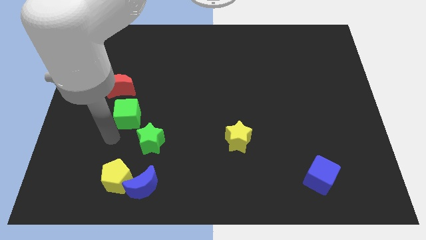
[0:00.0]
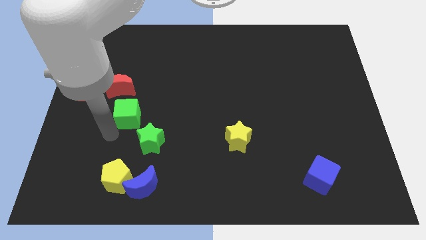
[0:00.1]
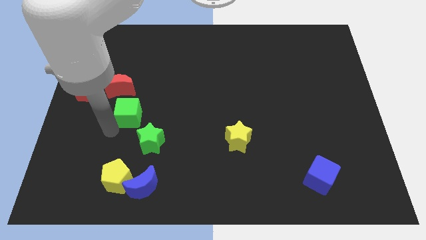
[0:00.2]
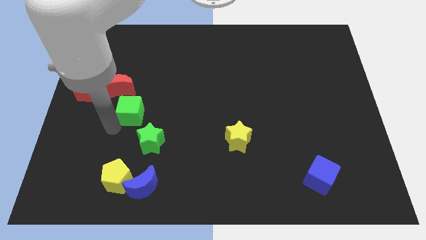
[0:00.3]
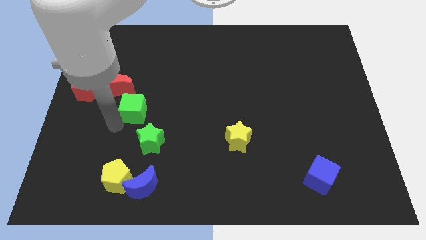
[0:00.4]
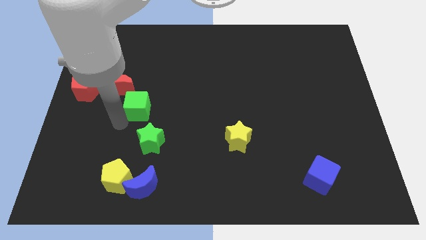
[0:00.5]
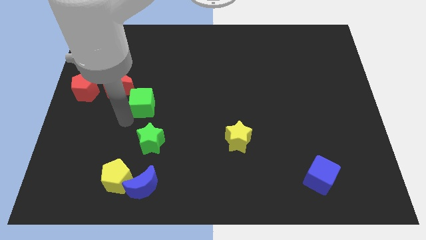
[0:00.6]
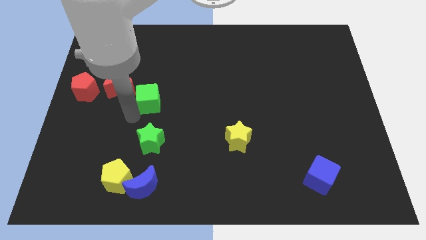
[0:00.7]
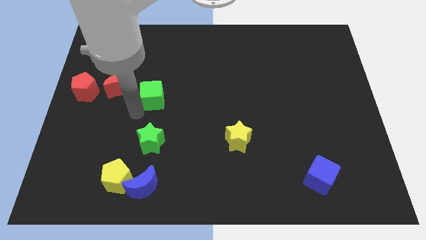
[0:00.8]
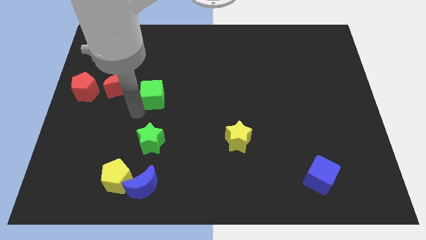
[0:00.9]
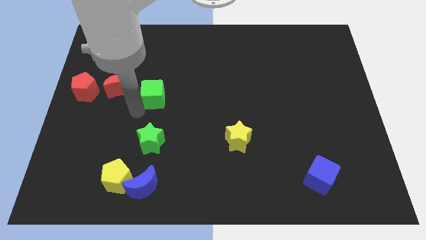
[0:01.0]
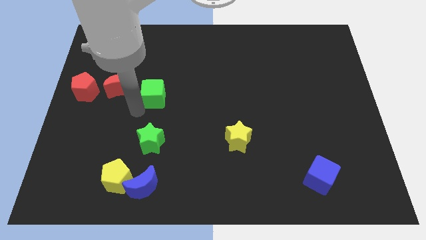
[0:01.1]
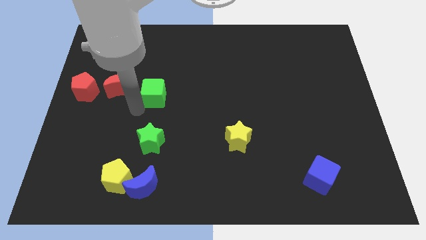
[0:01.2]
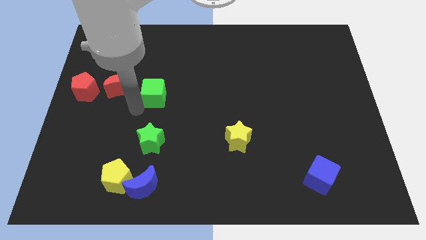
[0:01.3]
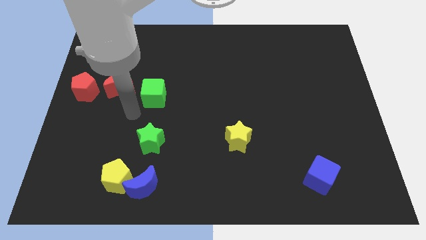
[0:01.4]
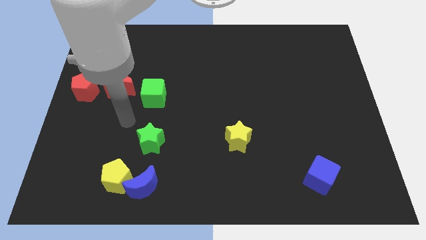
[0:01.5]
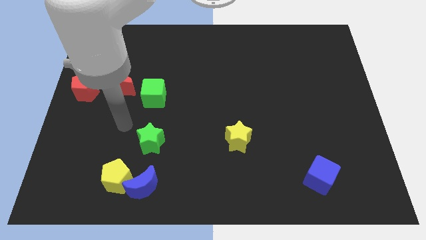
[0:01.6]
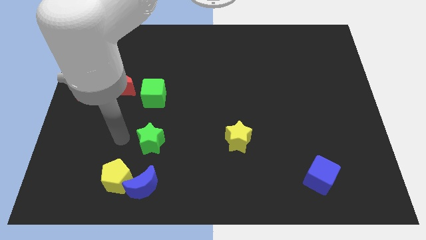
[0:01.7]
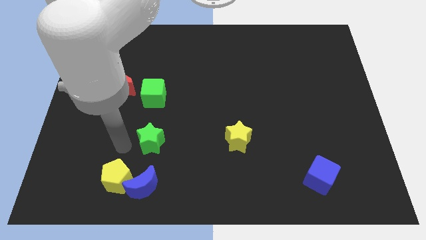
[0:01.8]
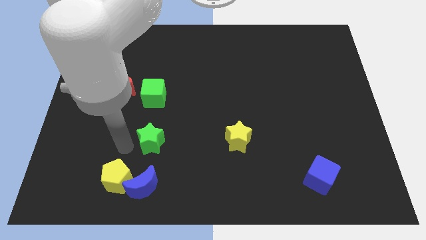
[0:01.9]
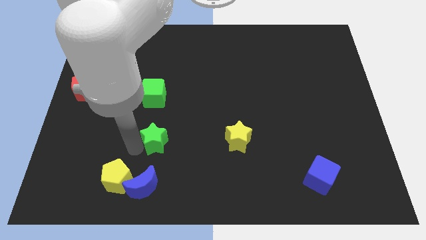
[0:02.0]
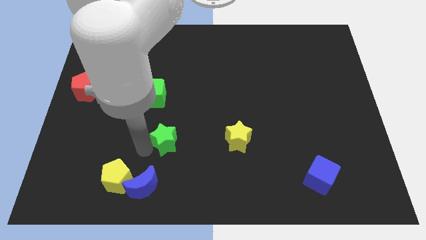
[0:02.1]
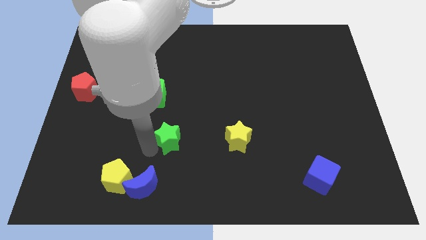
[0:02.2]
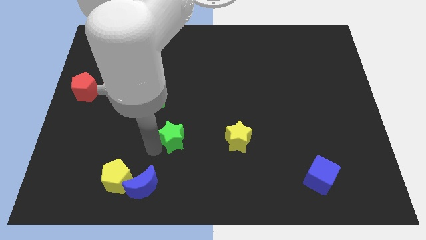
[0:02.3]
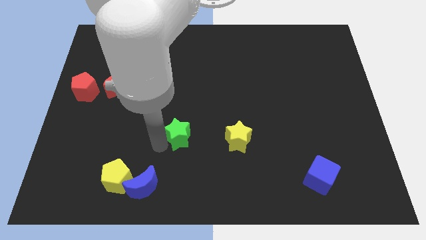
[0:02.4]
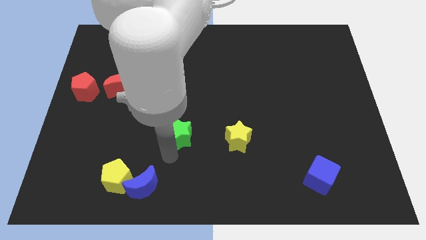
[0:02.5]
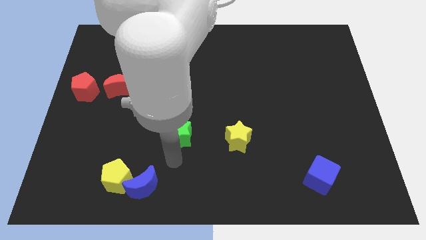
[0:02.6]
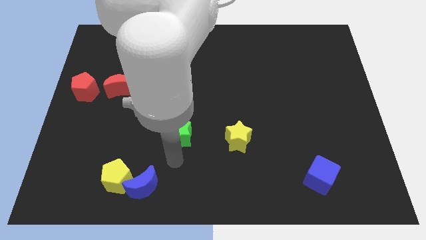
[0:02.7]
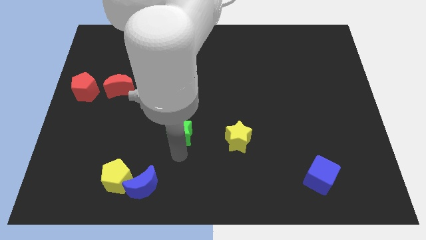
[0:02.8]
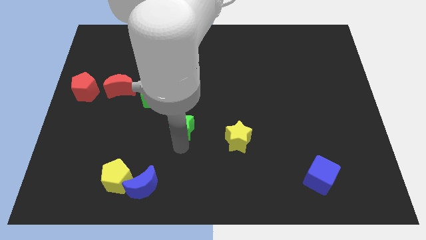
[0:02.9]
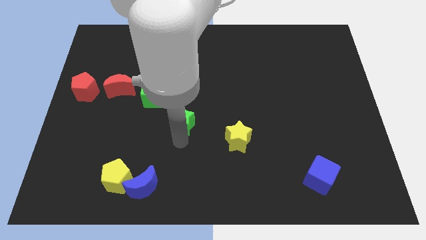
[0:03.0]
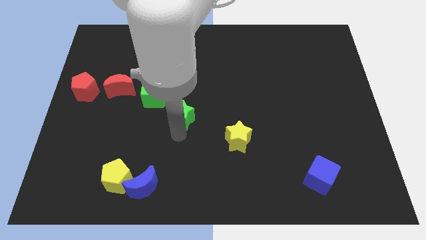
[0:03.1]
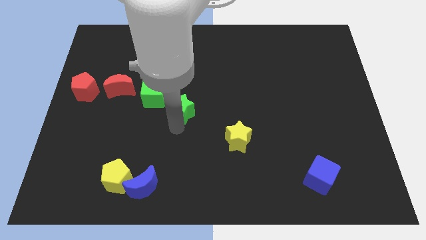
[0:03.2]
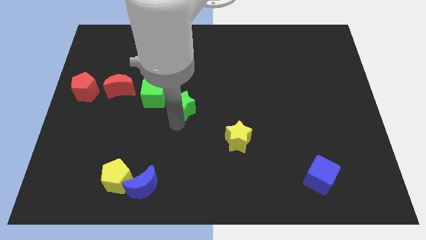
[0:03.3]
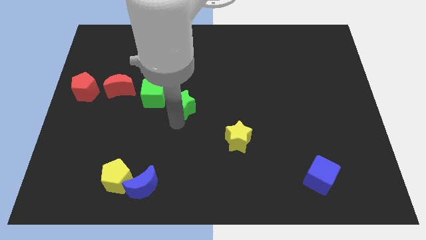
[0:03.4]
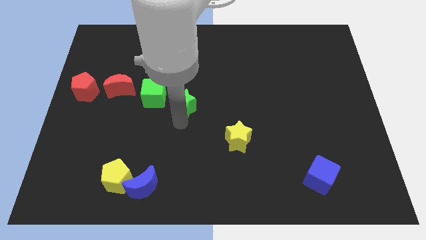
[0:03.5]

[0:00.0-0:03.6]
push both the green blocks diagonally on the top left side of the yellow star

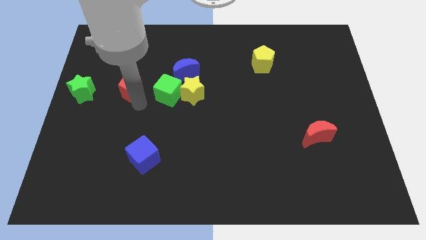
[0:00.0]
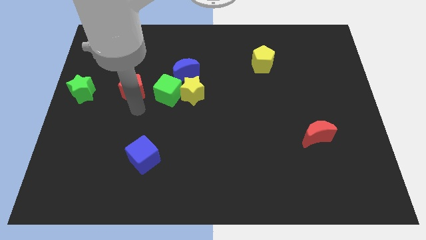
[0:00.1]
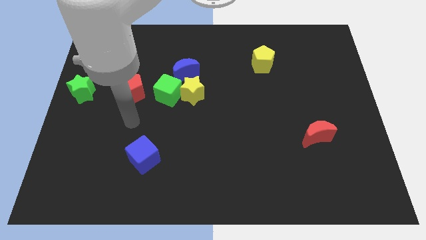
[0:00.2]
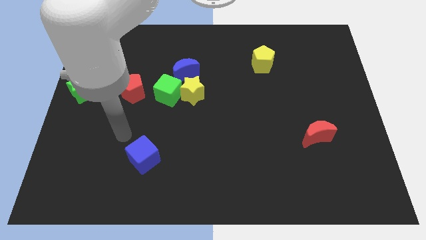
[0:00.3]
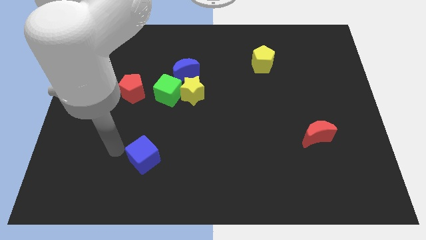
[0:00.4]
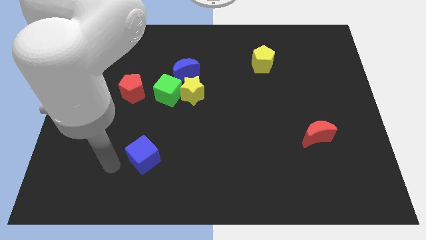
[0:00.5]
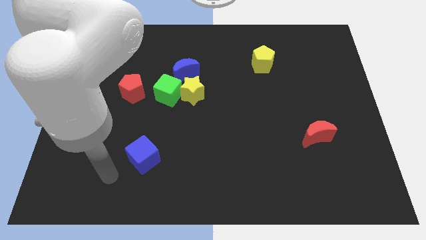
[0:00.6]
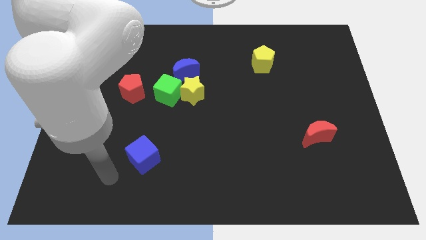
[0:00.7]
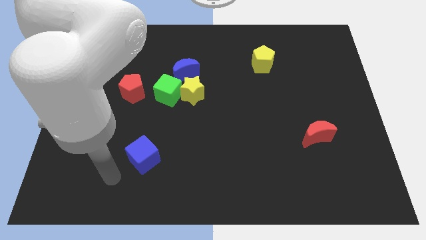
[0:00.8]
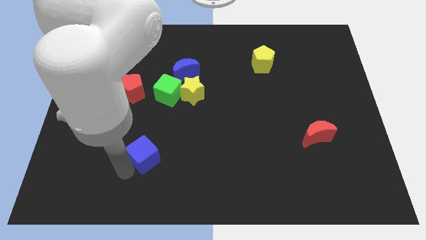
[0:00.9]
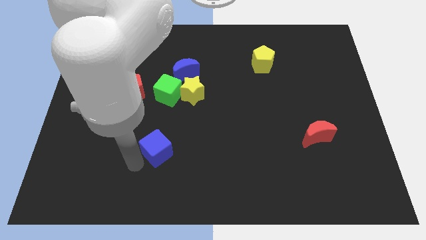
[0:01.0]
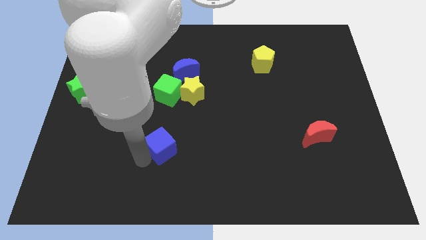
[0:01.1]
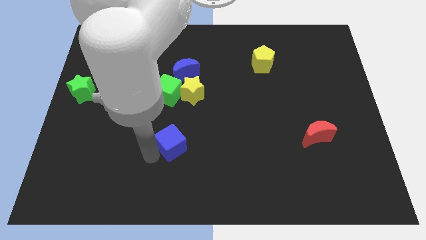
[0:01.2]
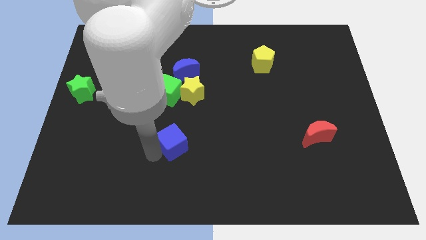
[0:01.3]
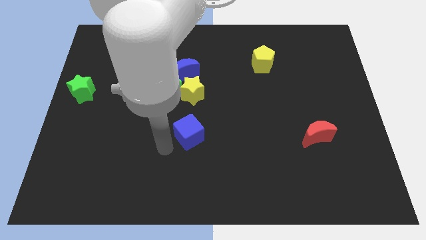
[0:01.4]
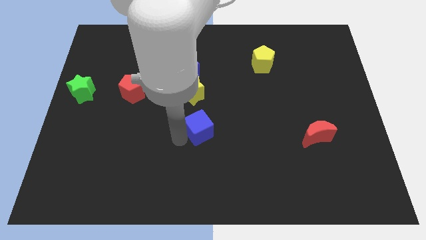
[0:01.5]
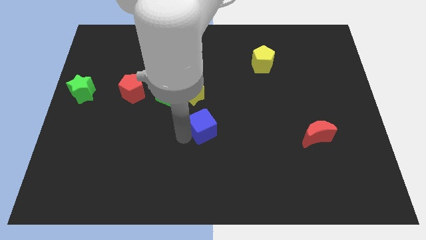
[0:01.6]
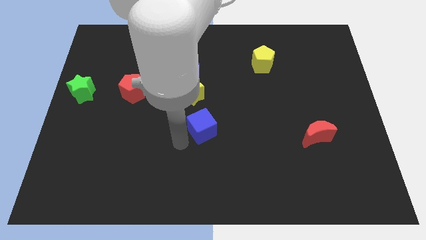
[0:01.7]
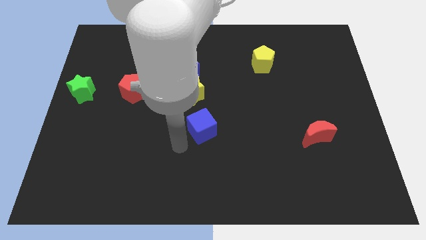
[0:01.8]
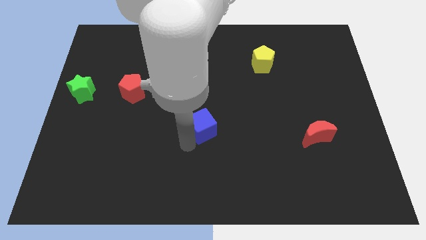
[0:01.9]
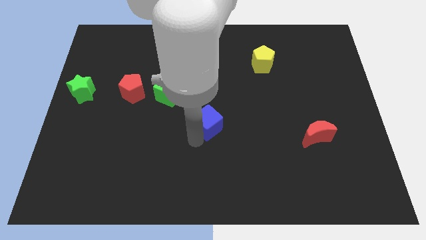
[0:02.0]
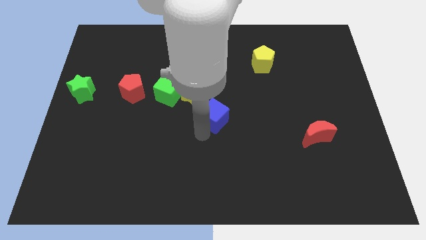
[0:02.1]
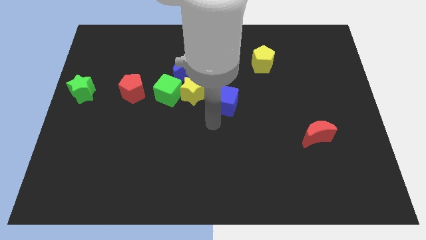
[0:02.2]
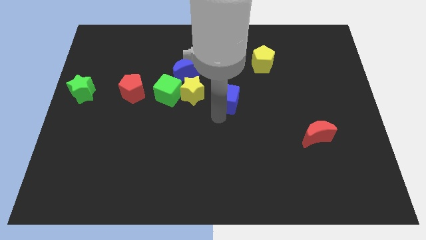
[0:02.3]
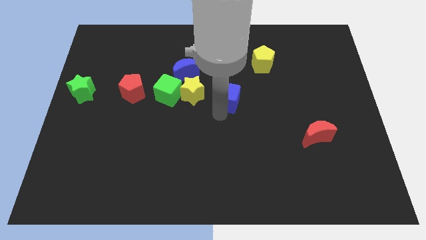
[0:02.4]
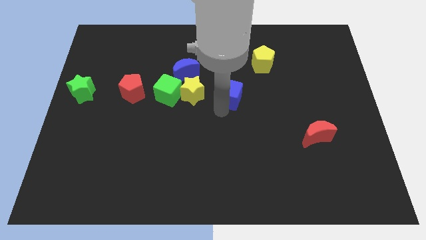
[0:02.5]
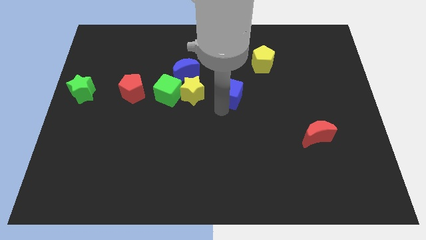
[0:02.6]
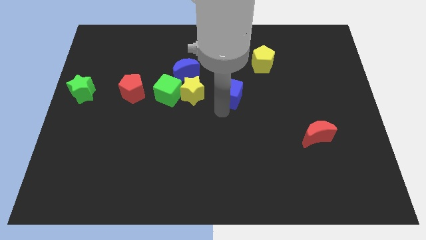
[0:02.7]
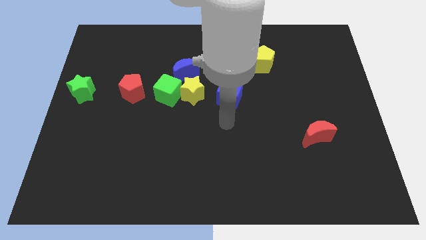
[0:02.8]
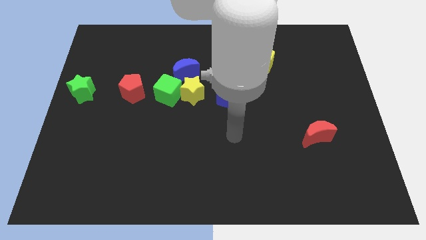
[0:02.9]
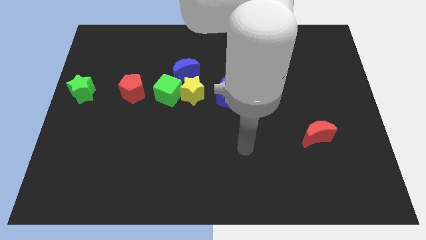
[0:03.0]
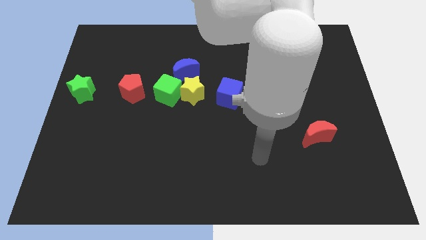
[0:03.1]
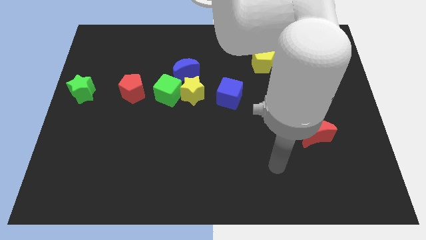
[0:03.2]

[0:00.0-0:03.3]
move the blue cube to the right of the yellow star

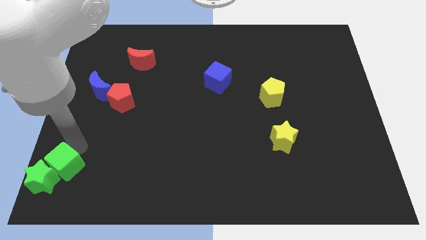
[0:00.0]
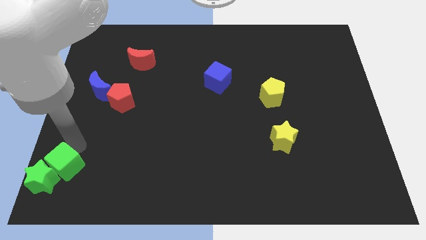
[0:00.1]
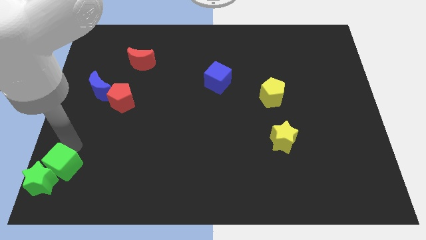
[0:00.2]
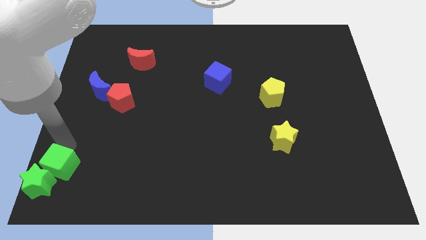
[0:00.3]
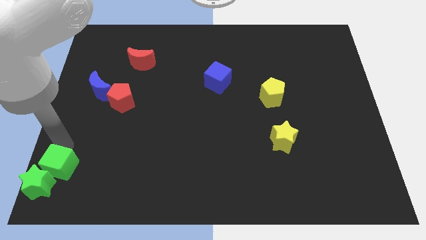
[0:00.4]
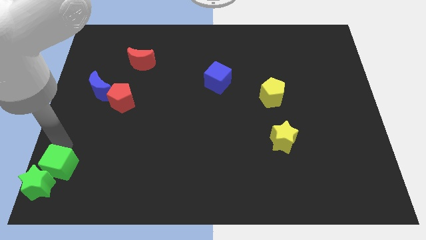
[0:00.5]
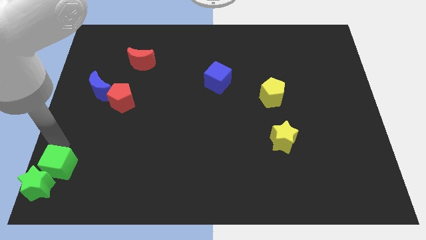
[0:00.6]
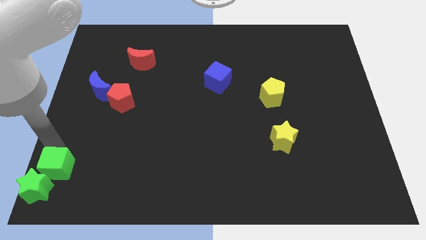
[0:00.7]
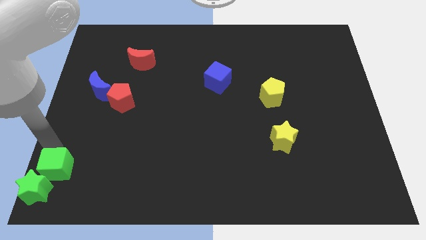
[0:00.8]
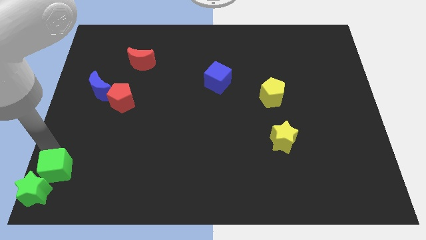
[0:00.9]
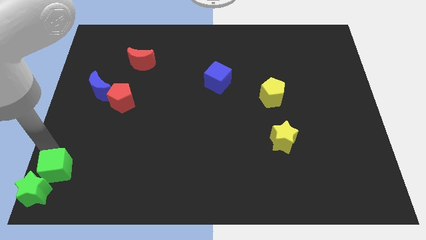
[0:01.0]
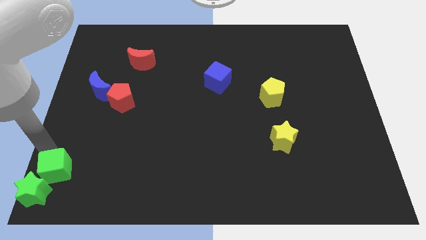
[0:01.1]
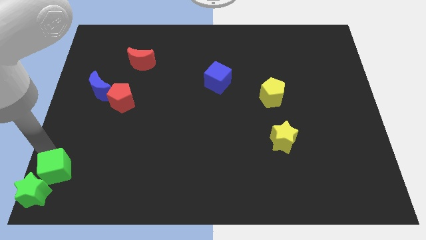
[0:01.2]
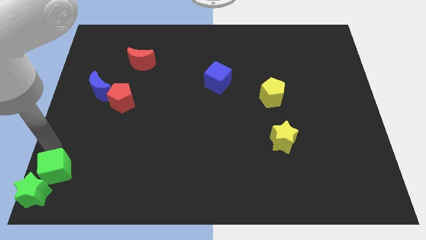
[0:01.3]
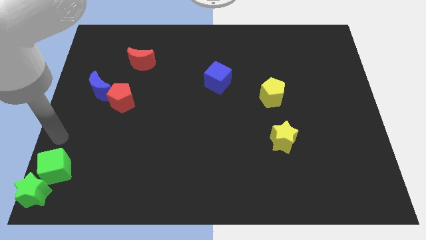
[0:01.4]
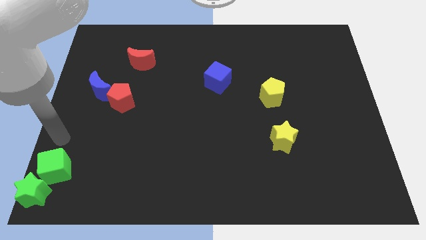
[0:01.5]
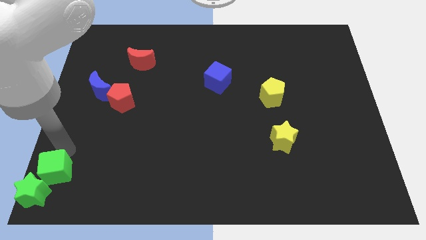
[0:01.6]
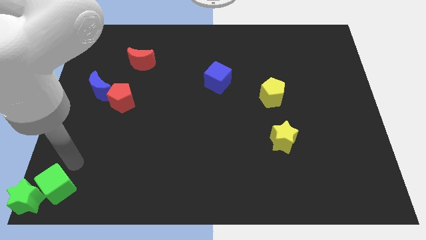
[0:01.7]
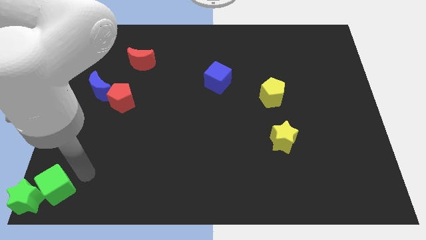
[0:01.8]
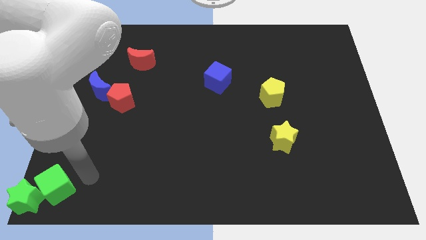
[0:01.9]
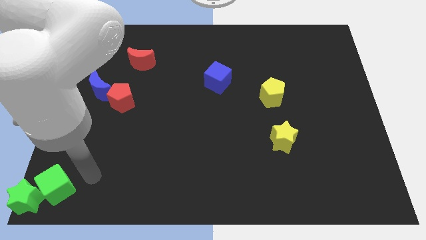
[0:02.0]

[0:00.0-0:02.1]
push the green blocks diagonally to yellow pentagon
